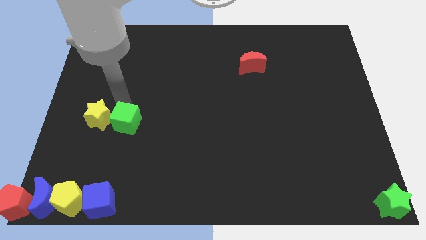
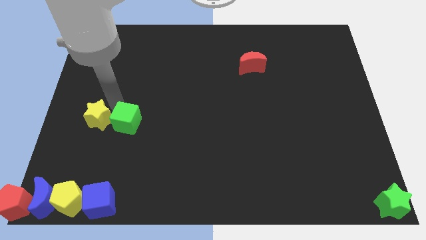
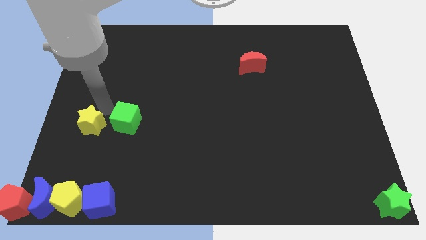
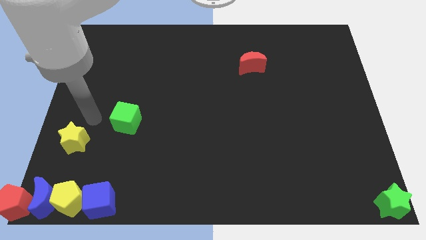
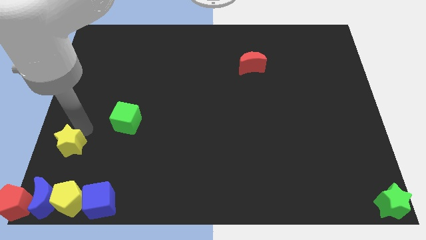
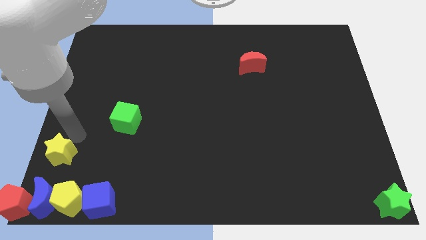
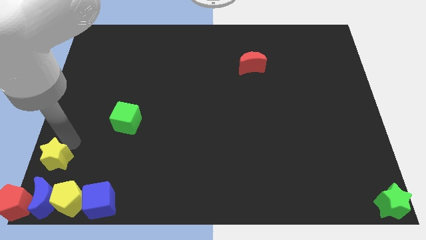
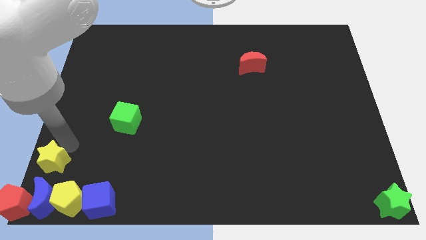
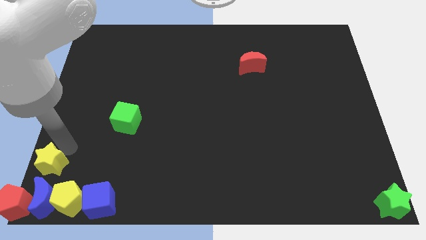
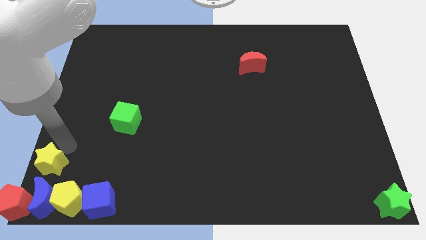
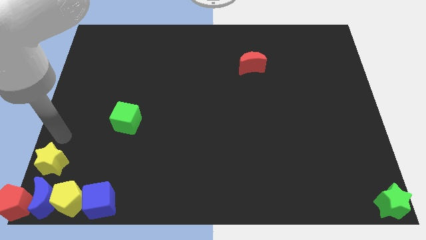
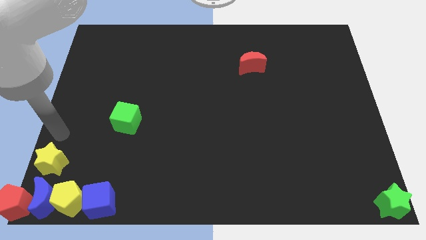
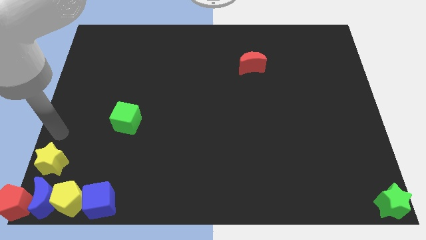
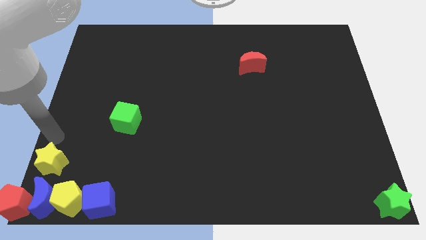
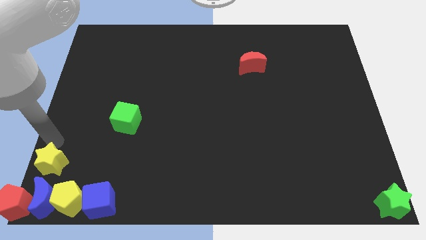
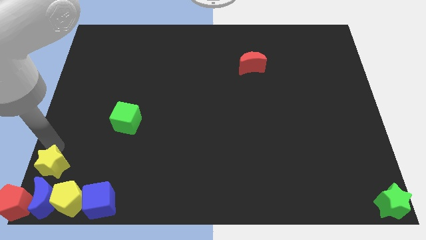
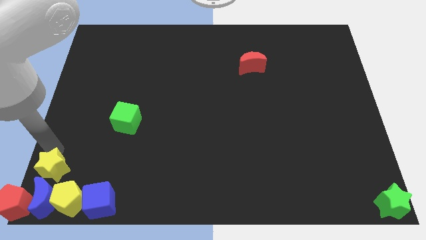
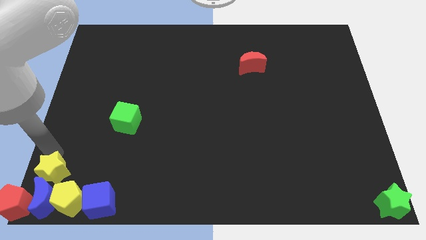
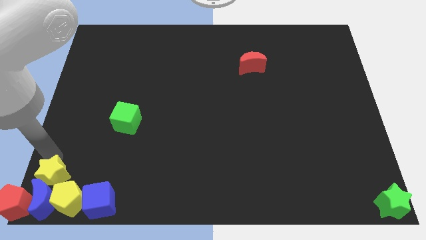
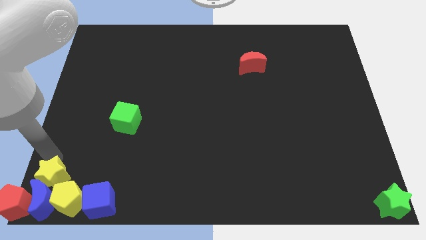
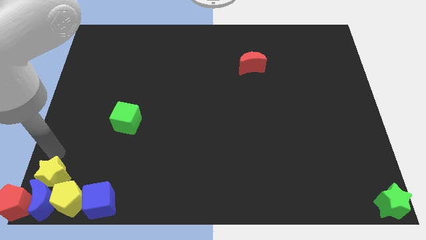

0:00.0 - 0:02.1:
push yellow star into group of blocks

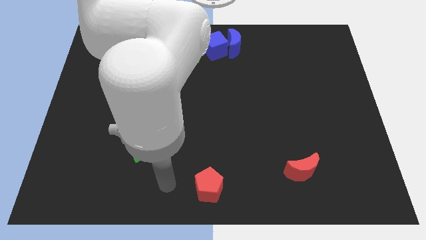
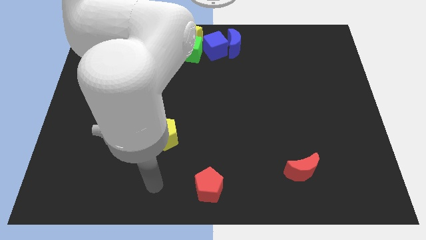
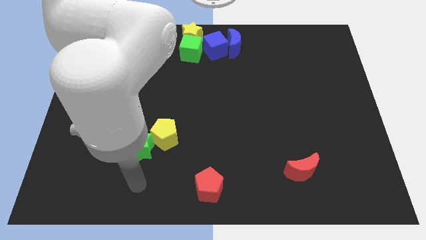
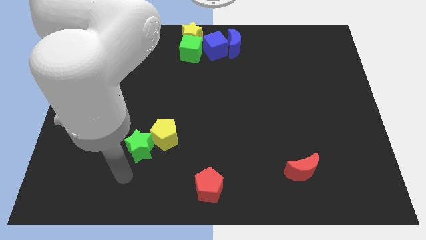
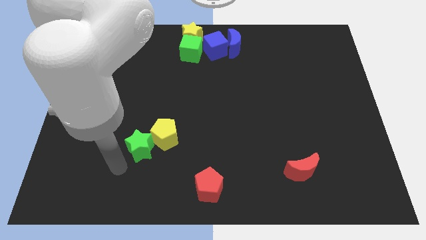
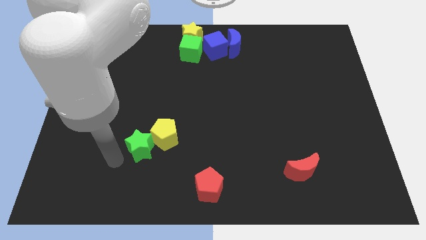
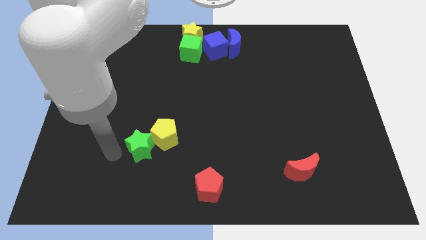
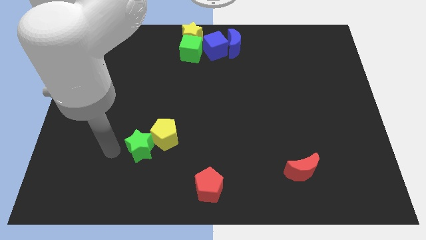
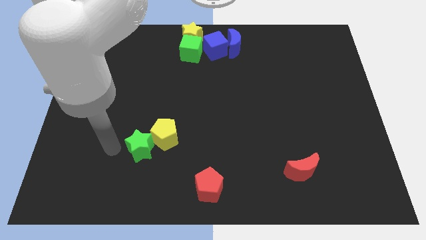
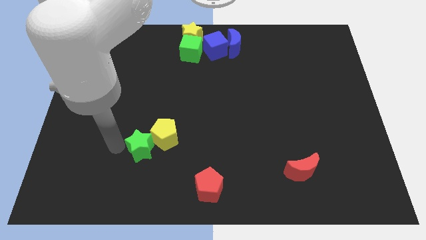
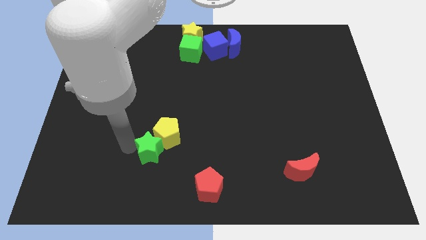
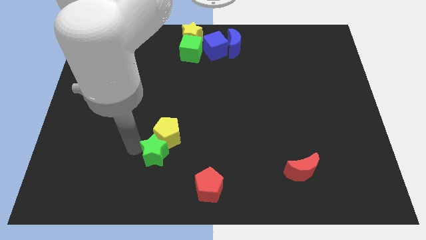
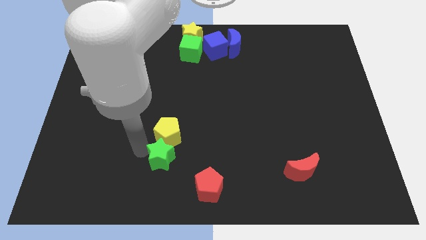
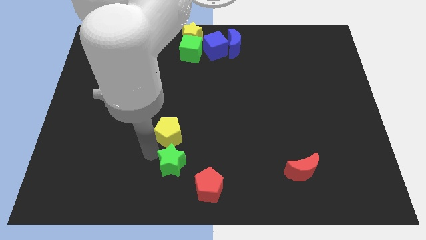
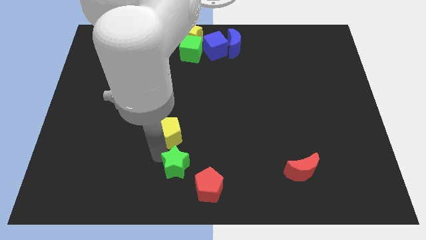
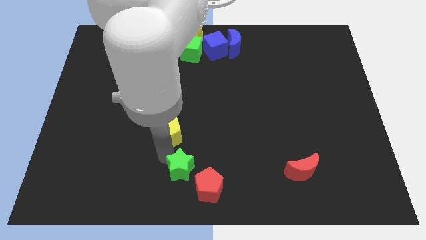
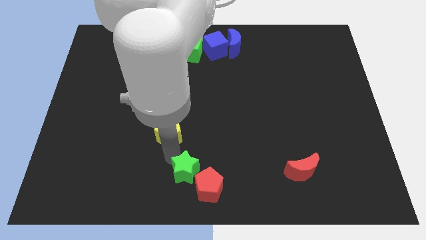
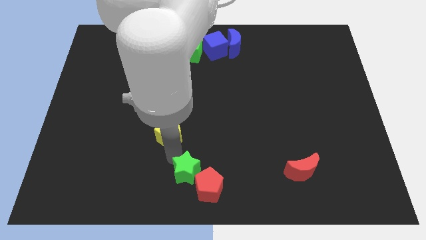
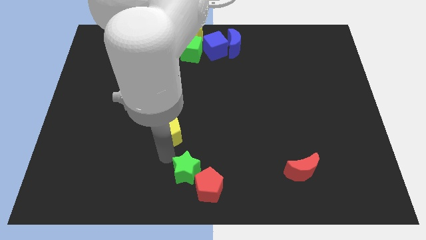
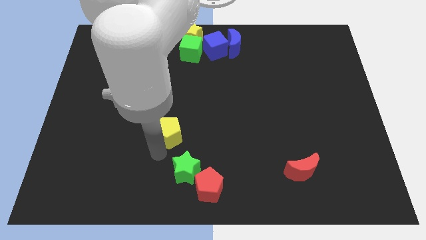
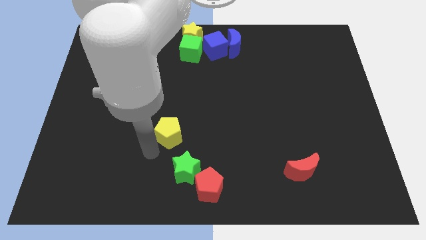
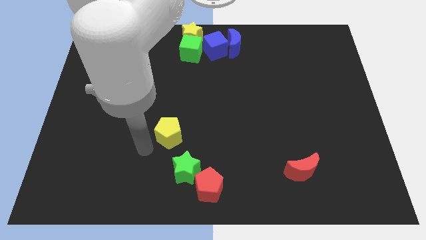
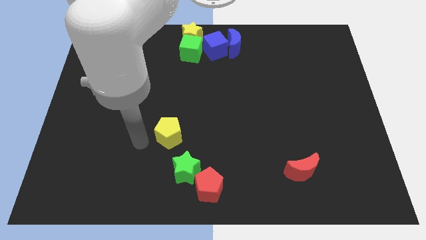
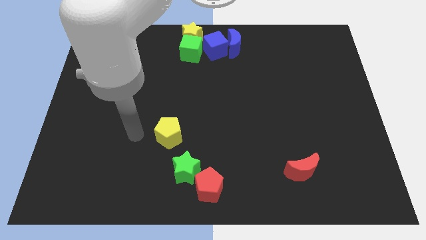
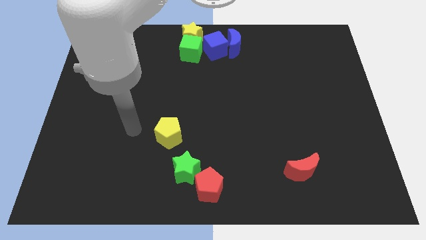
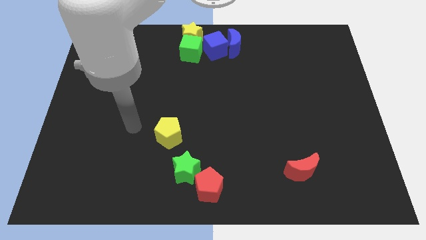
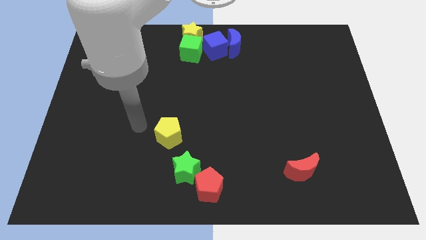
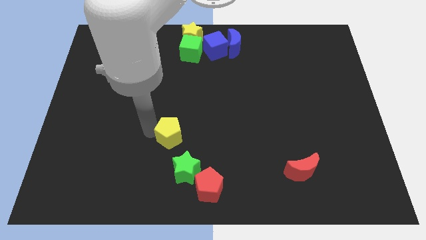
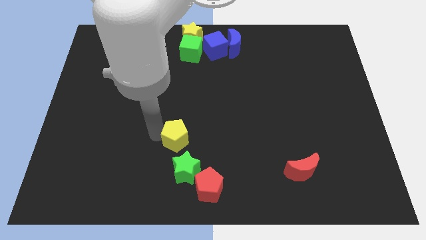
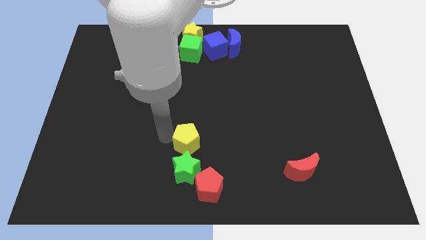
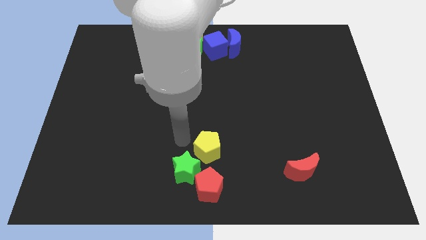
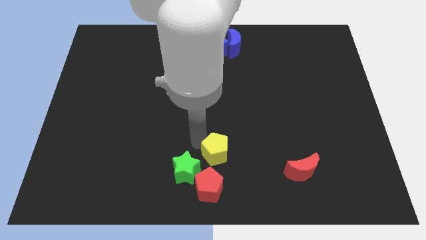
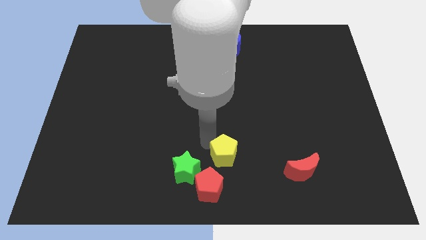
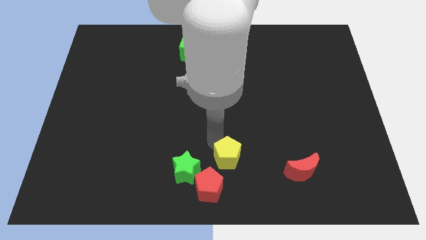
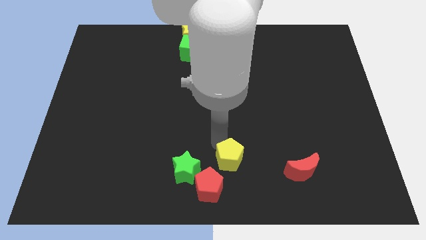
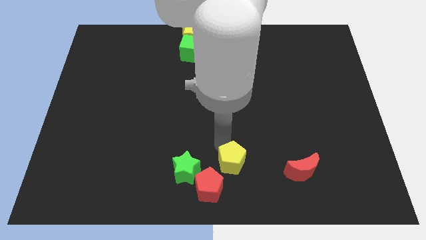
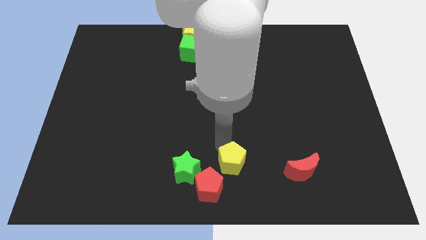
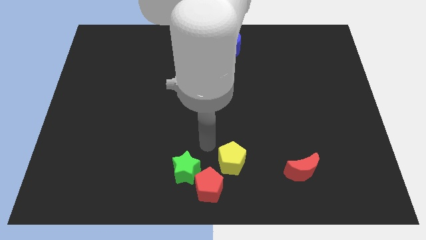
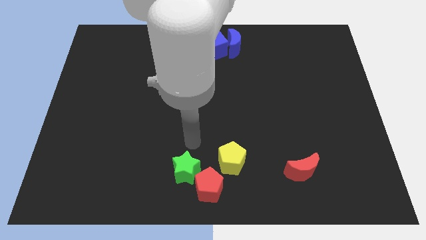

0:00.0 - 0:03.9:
place the green star yellow pentagon towards red pentagon

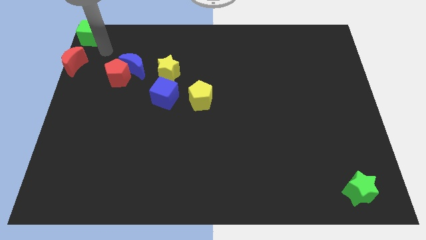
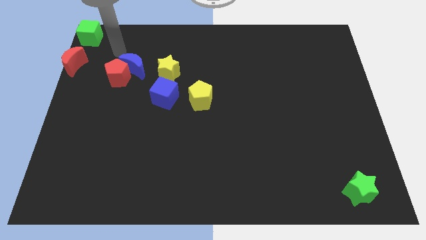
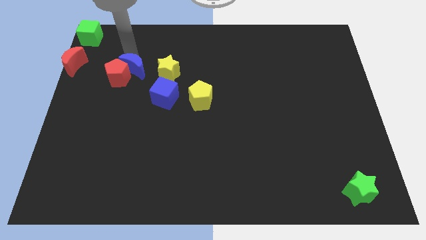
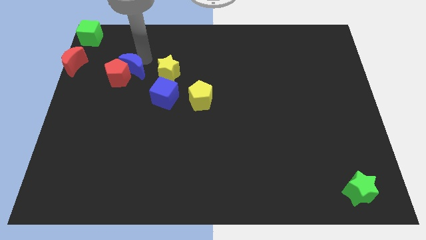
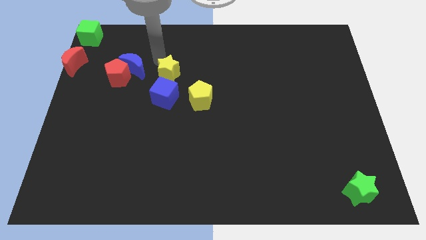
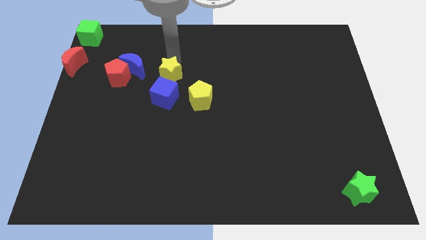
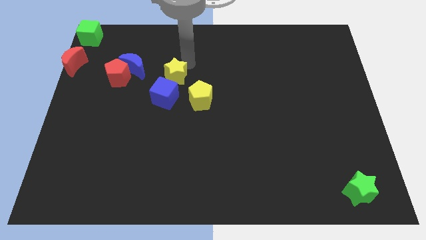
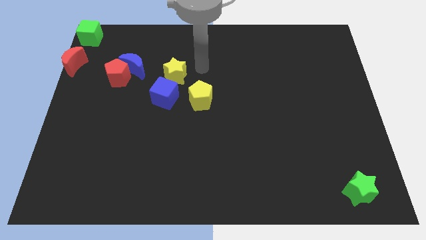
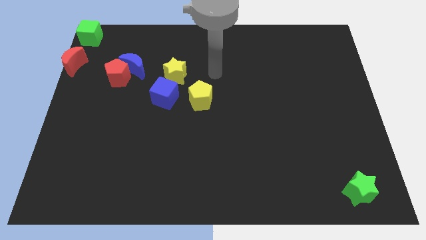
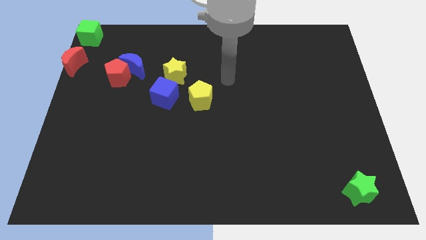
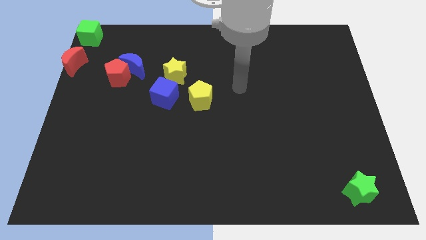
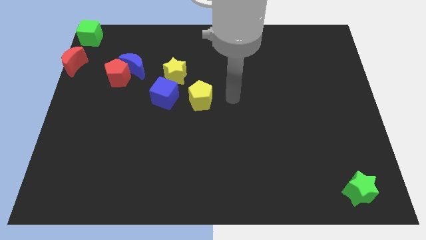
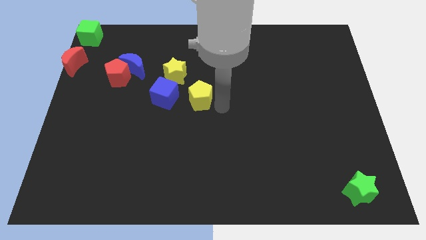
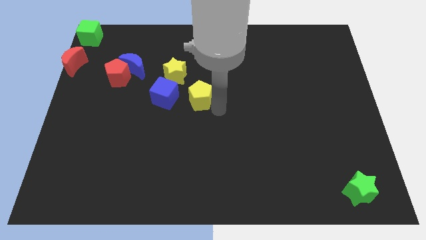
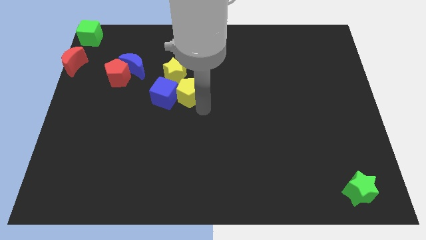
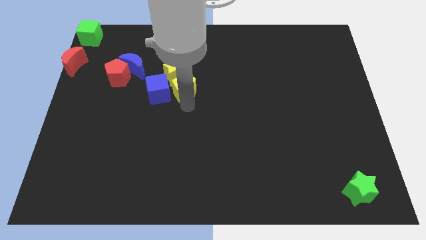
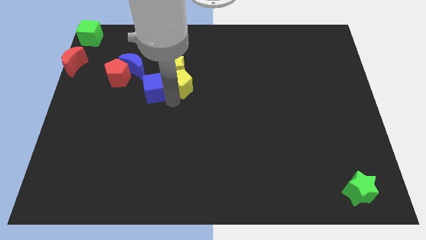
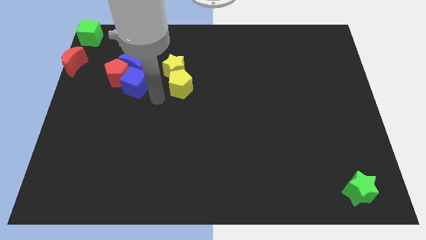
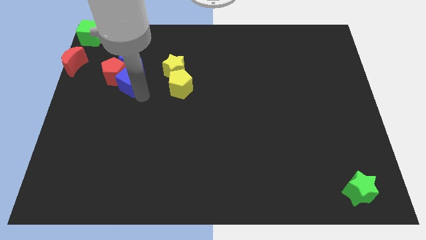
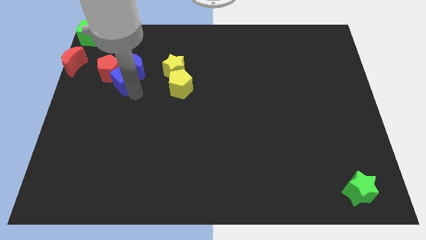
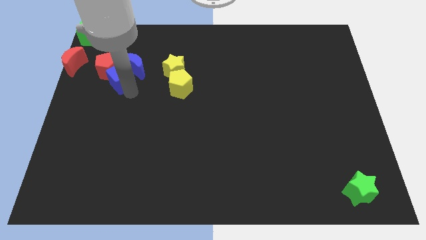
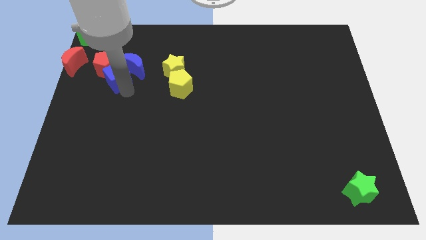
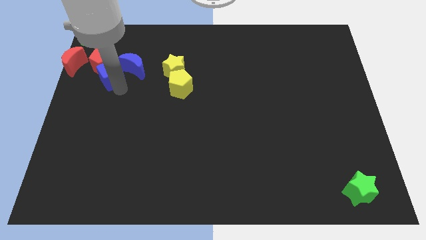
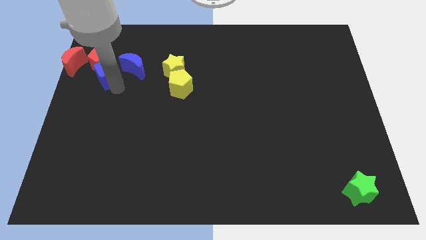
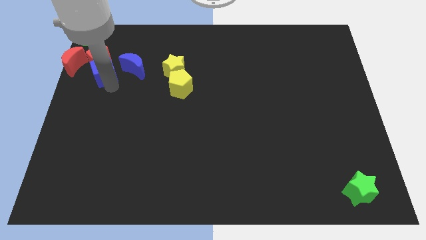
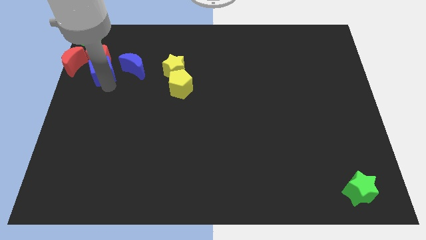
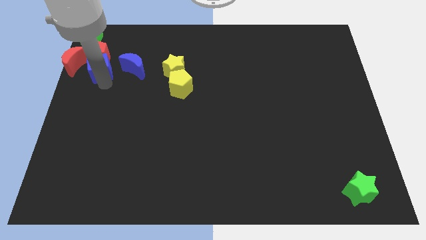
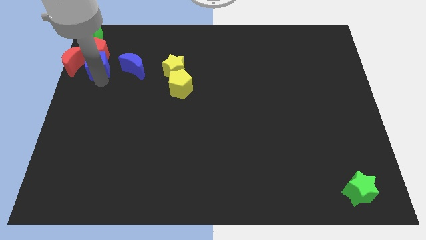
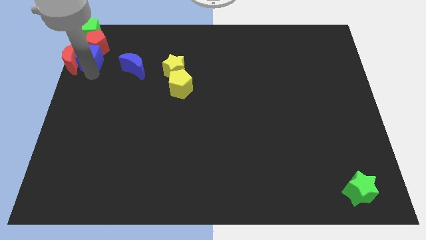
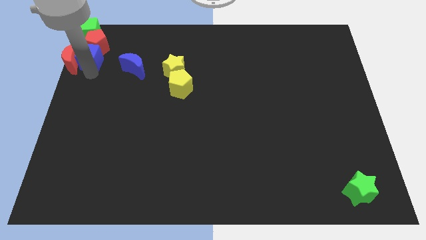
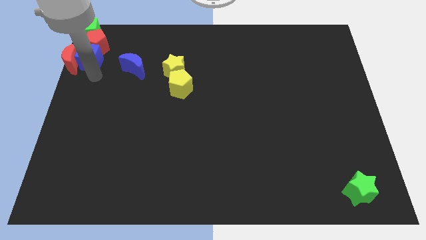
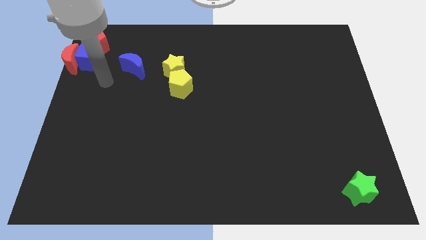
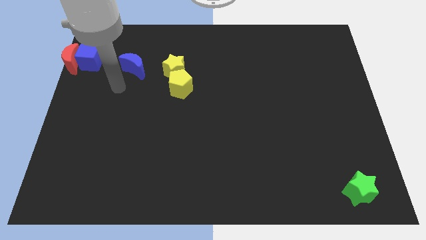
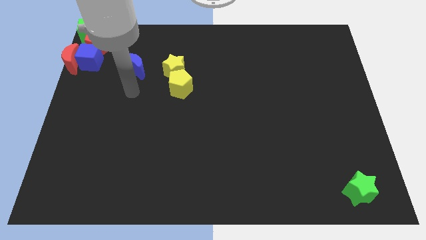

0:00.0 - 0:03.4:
push the red pentagon with the blue cube towards the top left of the board
